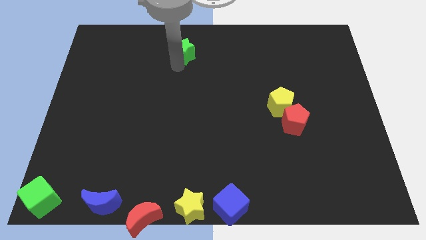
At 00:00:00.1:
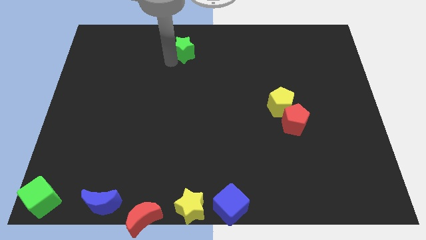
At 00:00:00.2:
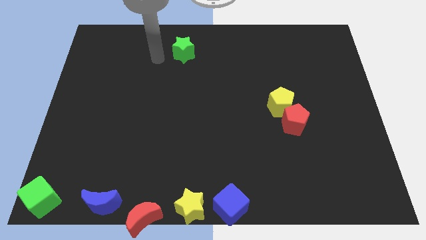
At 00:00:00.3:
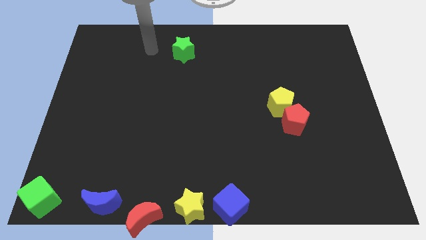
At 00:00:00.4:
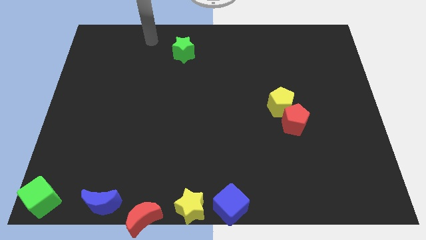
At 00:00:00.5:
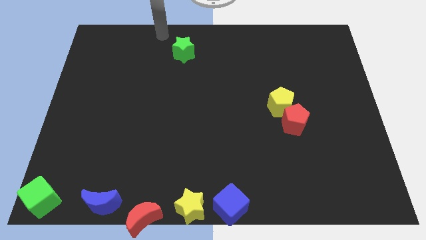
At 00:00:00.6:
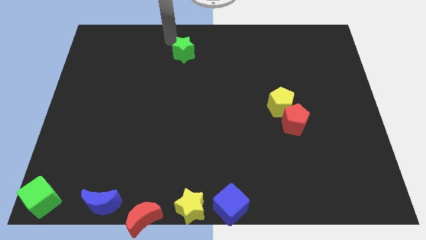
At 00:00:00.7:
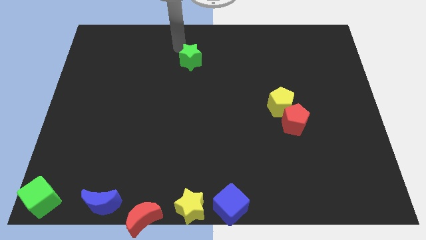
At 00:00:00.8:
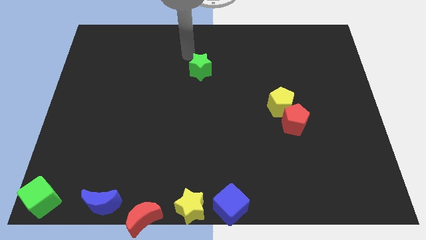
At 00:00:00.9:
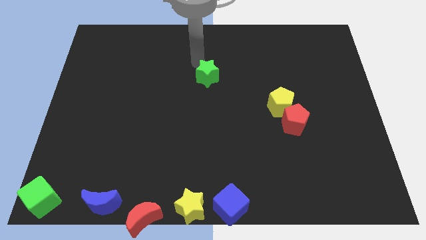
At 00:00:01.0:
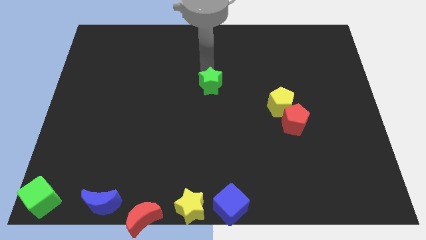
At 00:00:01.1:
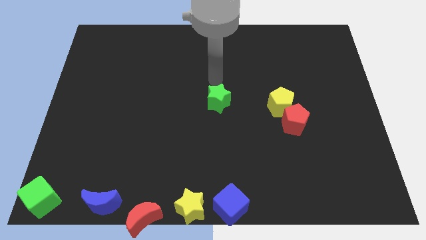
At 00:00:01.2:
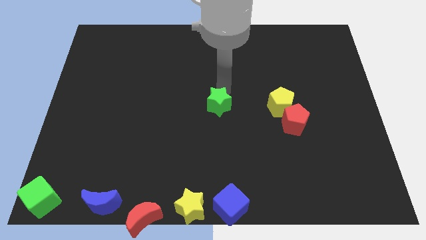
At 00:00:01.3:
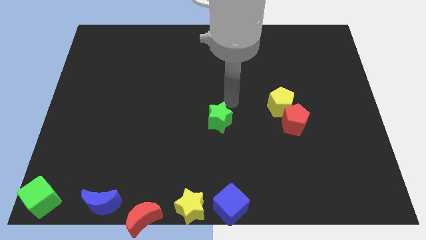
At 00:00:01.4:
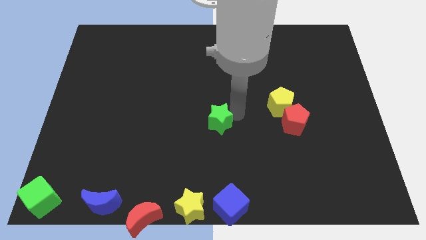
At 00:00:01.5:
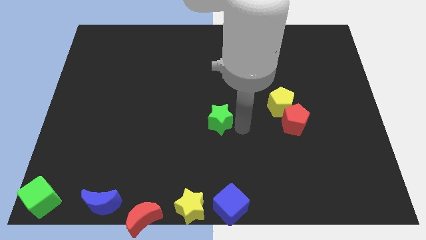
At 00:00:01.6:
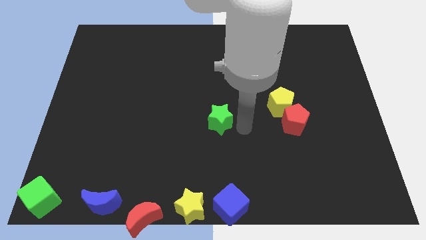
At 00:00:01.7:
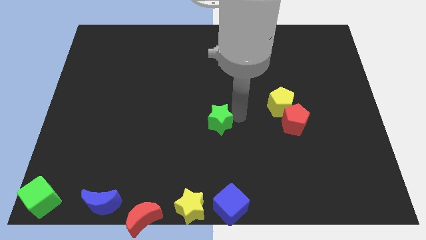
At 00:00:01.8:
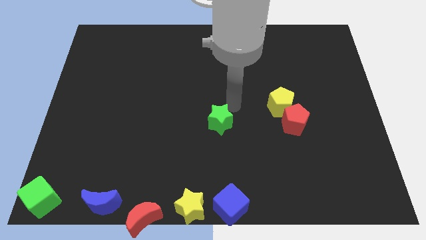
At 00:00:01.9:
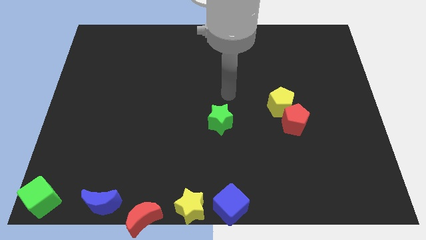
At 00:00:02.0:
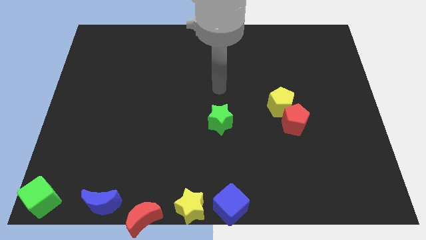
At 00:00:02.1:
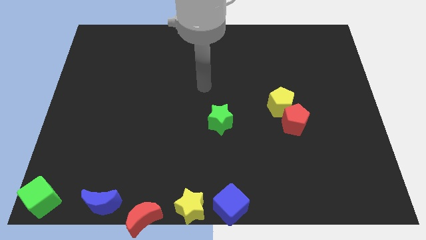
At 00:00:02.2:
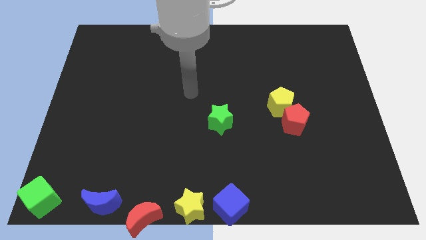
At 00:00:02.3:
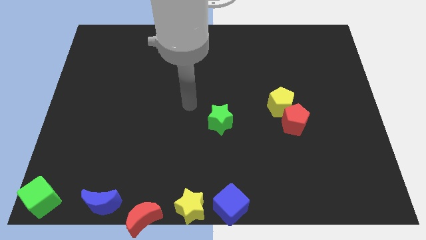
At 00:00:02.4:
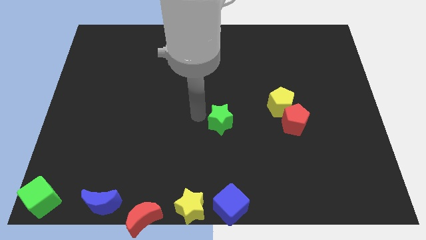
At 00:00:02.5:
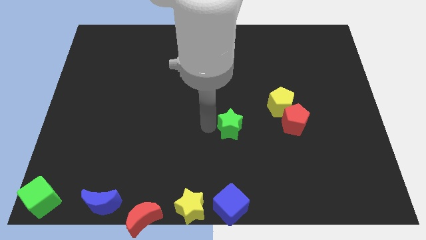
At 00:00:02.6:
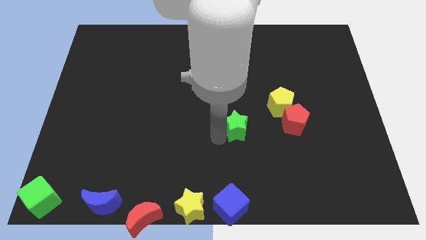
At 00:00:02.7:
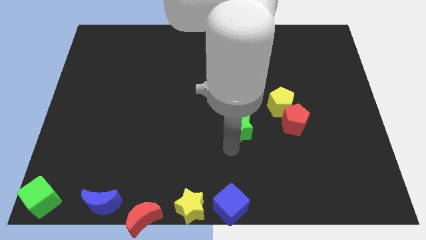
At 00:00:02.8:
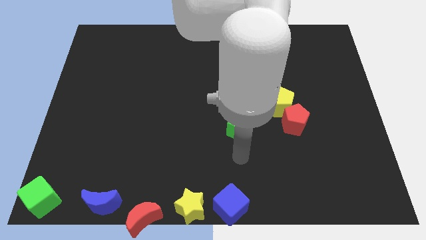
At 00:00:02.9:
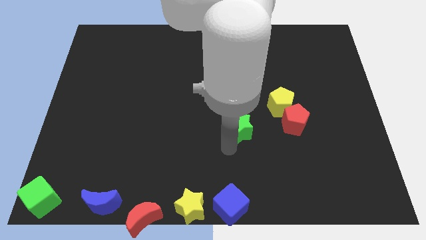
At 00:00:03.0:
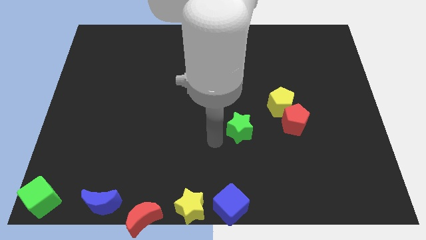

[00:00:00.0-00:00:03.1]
push the green star to the left of the red pentagon

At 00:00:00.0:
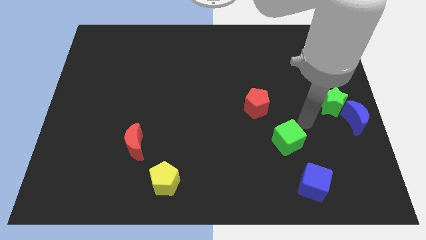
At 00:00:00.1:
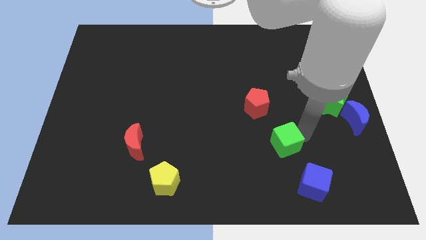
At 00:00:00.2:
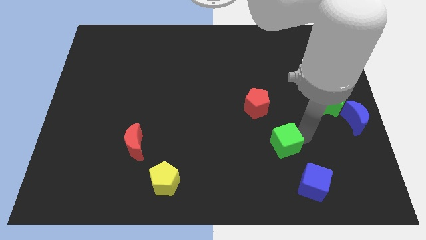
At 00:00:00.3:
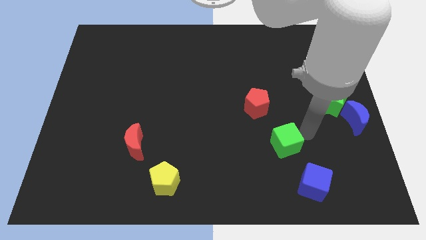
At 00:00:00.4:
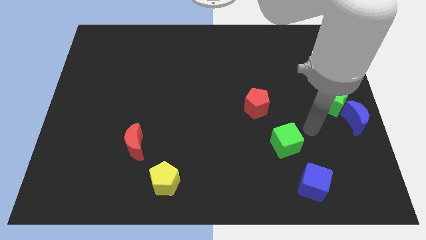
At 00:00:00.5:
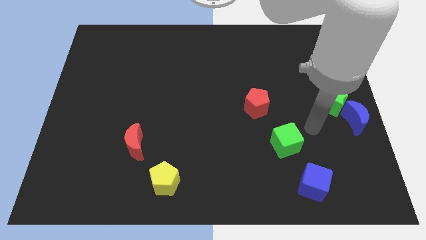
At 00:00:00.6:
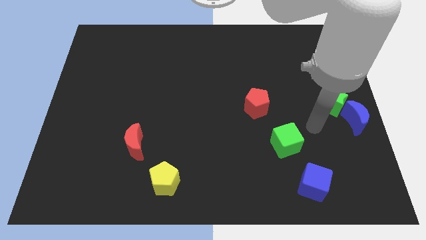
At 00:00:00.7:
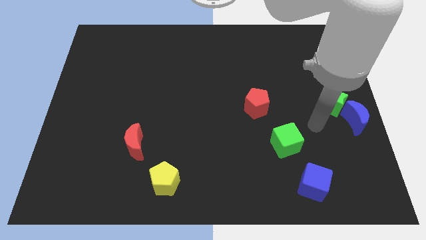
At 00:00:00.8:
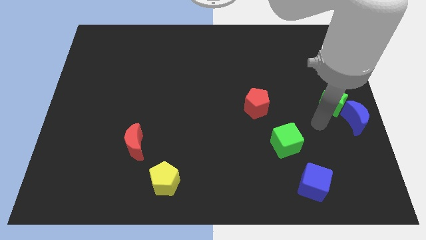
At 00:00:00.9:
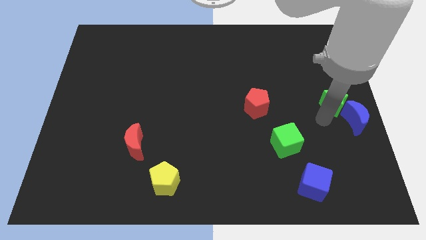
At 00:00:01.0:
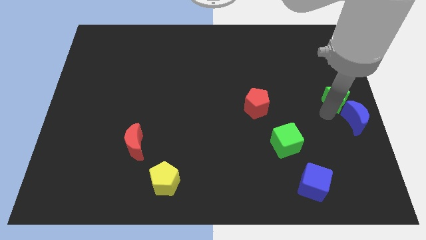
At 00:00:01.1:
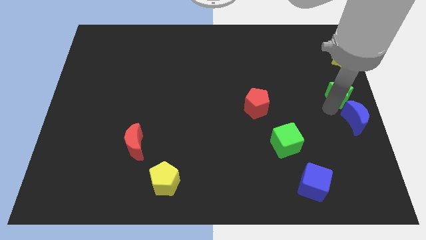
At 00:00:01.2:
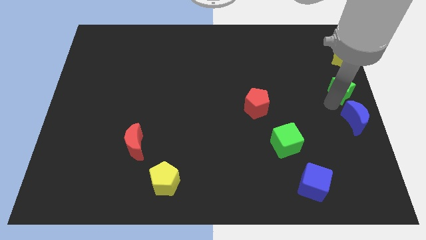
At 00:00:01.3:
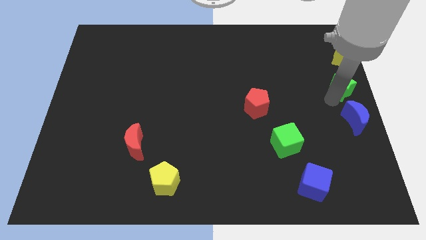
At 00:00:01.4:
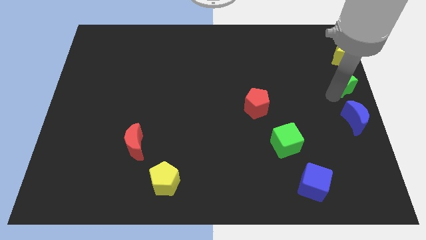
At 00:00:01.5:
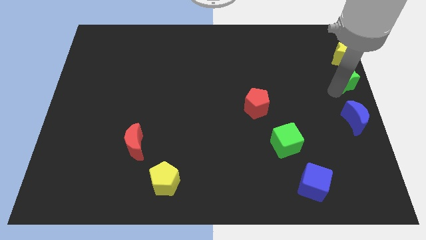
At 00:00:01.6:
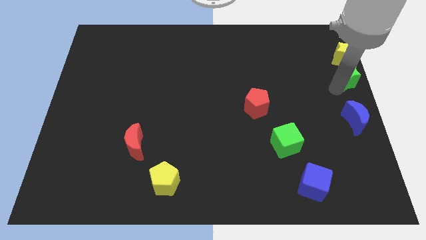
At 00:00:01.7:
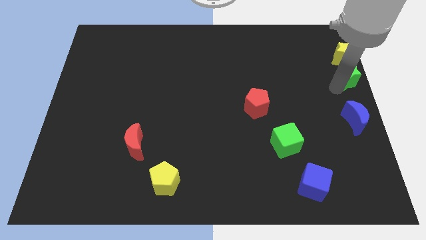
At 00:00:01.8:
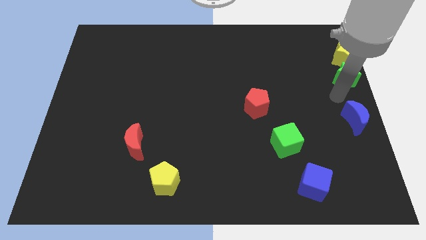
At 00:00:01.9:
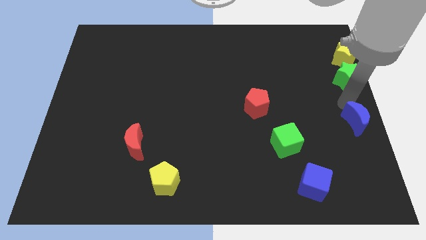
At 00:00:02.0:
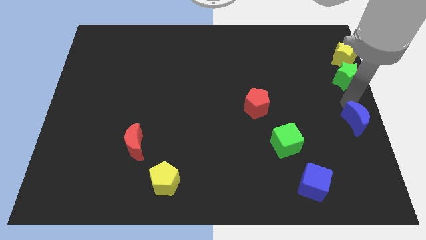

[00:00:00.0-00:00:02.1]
push the green star below to the yellow star

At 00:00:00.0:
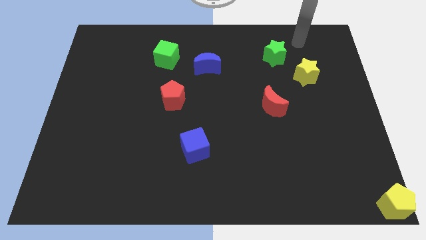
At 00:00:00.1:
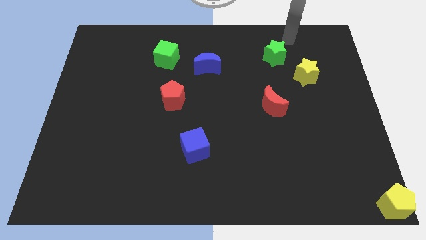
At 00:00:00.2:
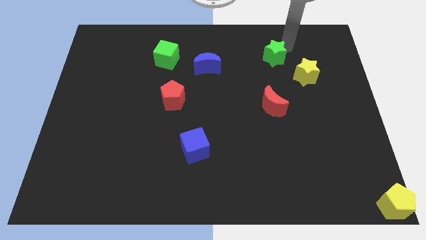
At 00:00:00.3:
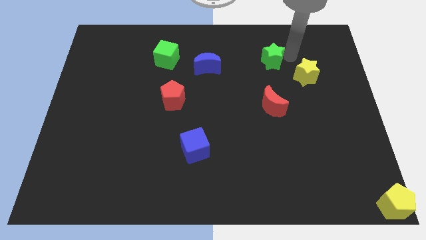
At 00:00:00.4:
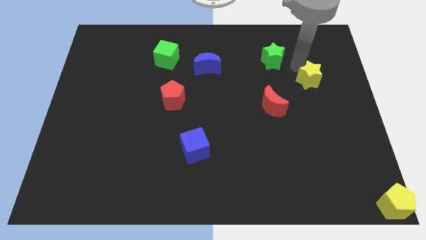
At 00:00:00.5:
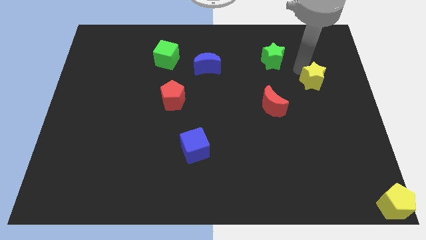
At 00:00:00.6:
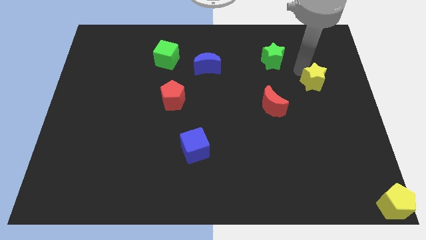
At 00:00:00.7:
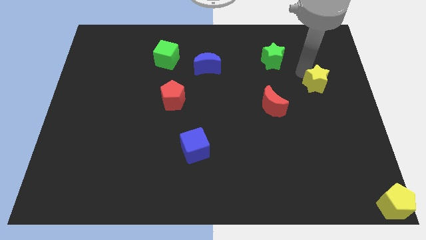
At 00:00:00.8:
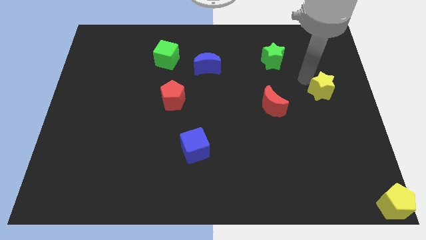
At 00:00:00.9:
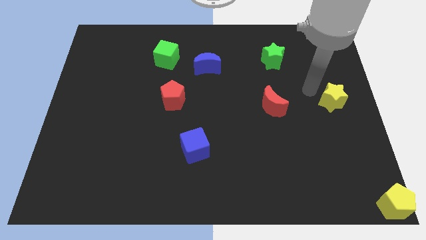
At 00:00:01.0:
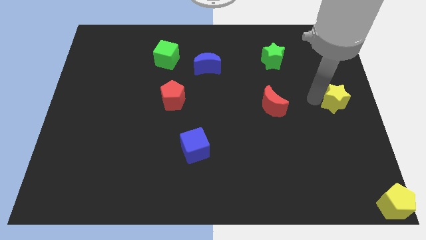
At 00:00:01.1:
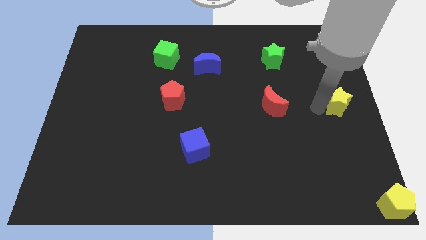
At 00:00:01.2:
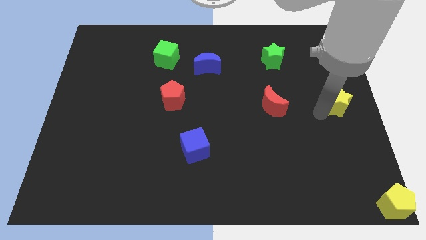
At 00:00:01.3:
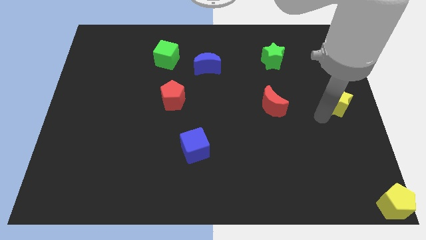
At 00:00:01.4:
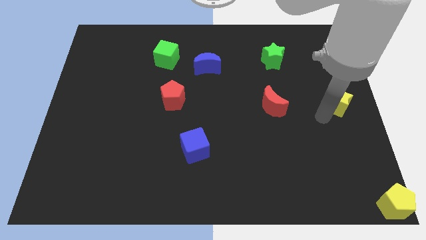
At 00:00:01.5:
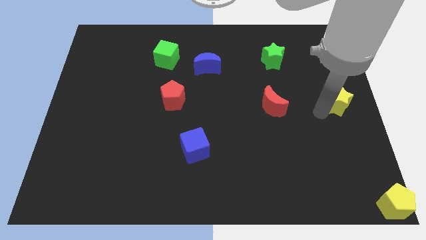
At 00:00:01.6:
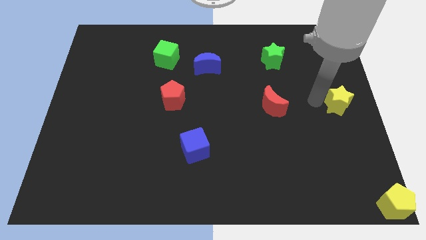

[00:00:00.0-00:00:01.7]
push the yellow star towards the right side of the red crescent

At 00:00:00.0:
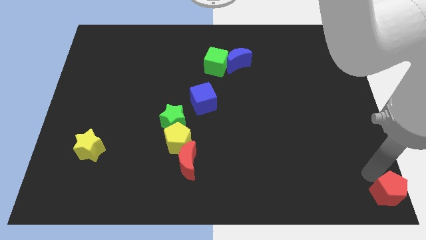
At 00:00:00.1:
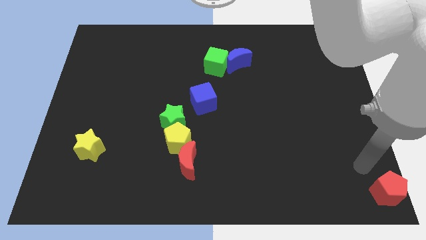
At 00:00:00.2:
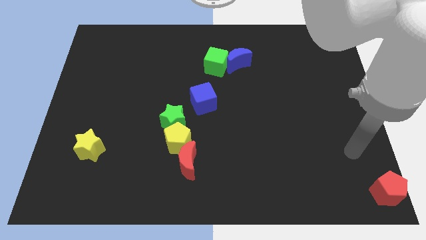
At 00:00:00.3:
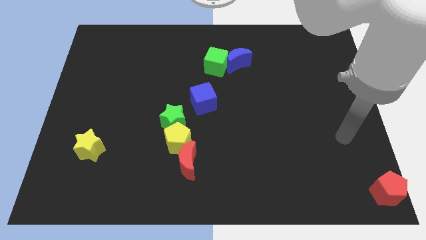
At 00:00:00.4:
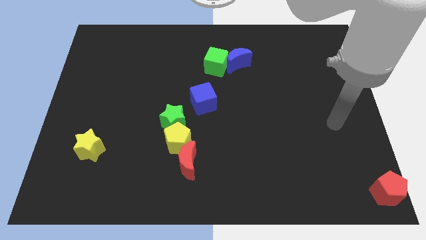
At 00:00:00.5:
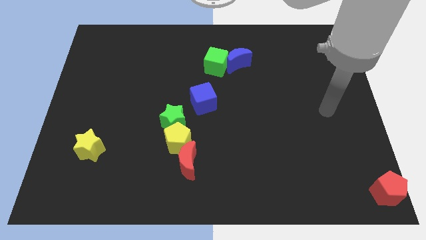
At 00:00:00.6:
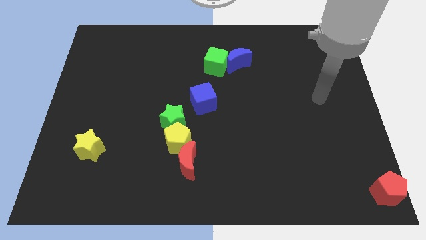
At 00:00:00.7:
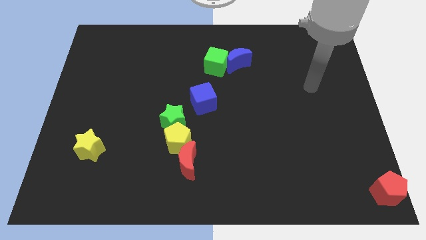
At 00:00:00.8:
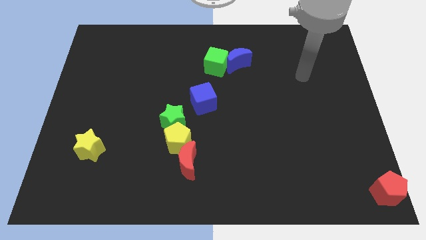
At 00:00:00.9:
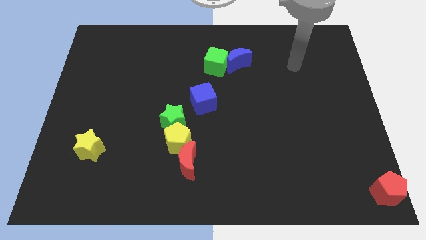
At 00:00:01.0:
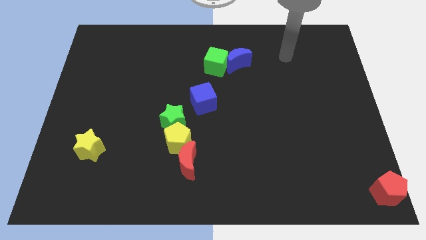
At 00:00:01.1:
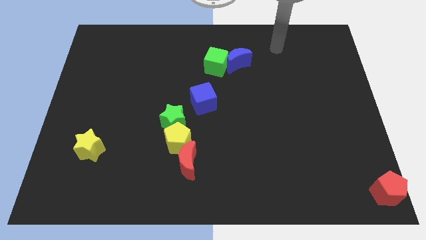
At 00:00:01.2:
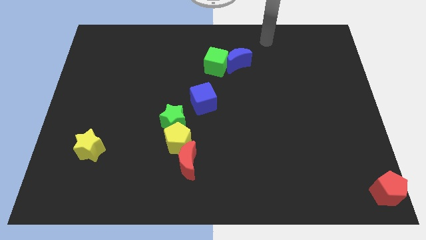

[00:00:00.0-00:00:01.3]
move your arm away from the red pentagon

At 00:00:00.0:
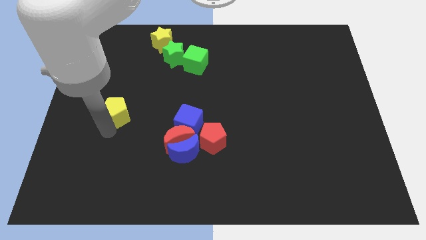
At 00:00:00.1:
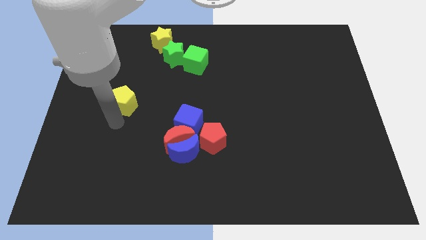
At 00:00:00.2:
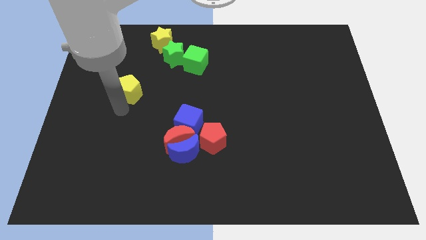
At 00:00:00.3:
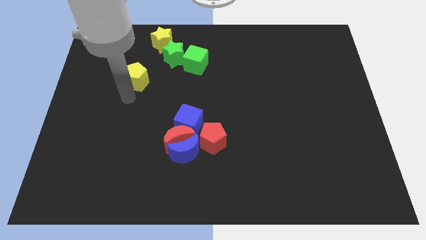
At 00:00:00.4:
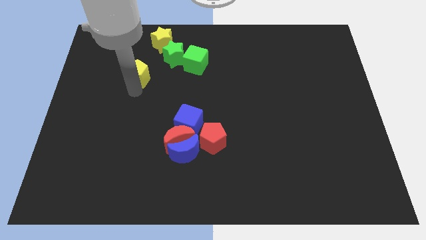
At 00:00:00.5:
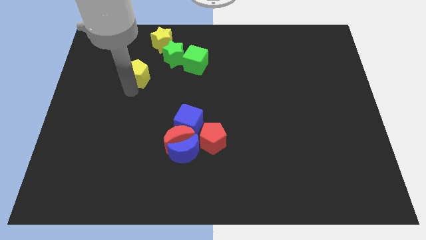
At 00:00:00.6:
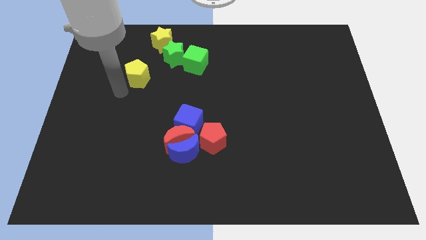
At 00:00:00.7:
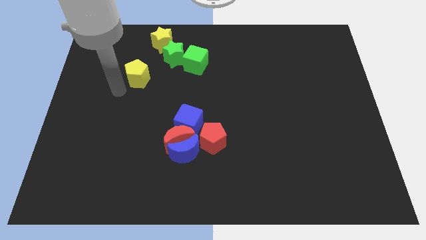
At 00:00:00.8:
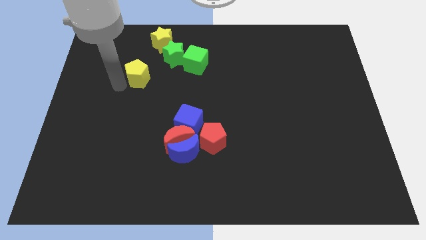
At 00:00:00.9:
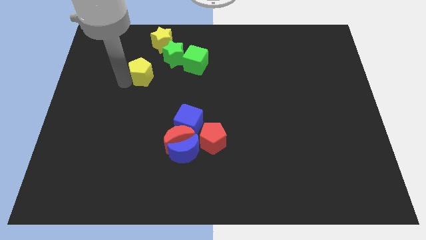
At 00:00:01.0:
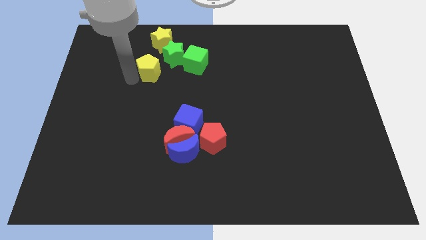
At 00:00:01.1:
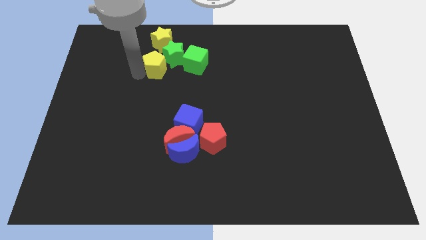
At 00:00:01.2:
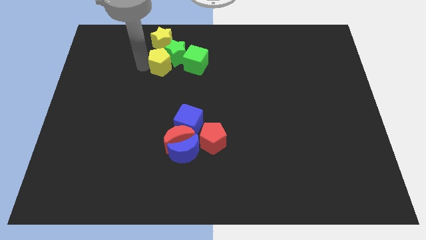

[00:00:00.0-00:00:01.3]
move the yellow pentagon into a group of blocks
